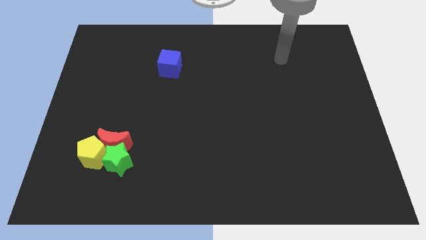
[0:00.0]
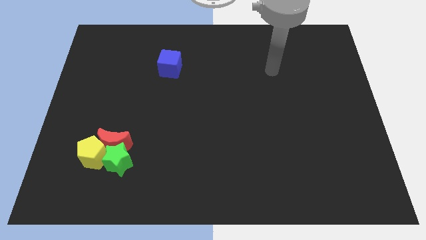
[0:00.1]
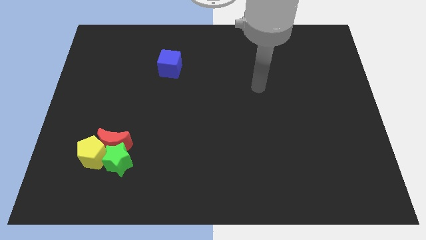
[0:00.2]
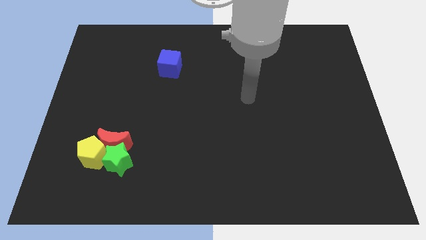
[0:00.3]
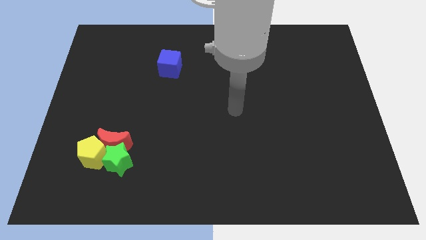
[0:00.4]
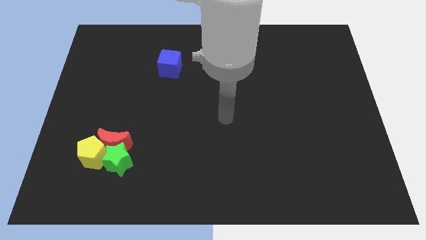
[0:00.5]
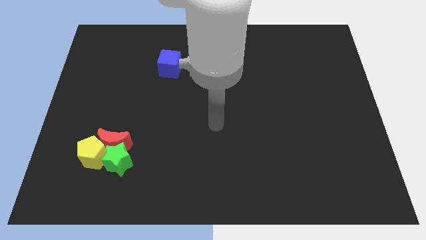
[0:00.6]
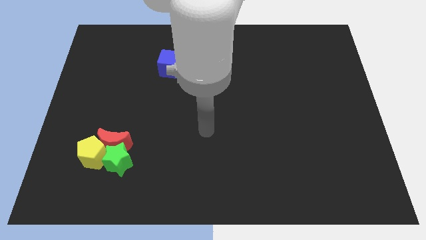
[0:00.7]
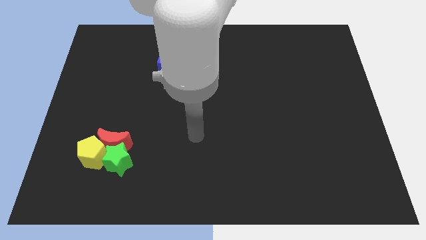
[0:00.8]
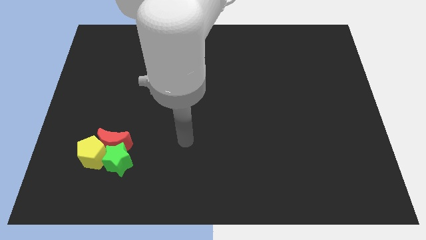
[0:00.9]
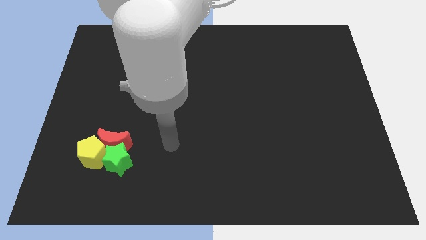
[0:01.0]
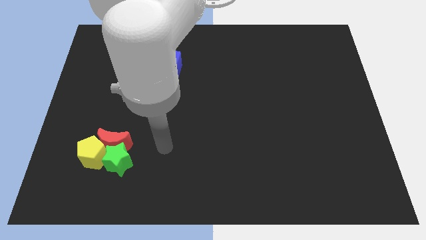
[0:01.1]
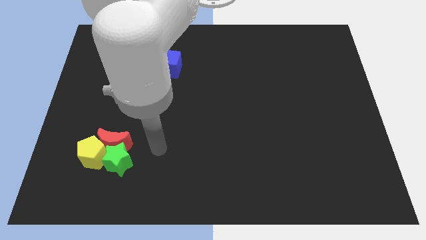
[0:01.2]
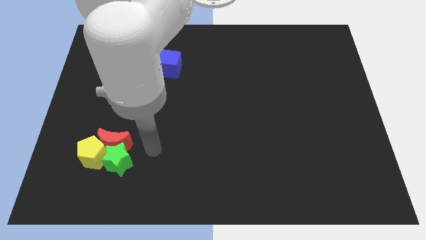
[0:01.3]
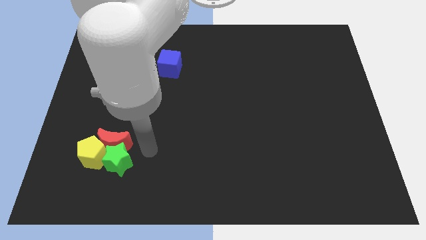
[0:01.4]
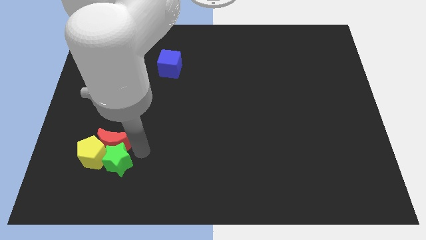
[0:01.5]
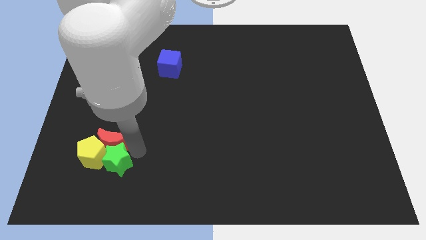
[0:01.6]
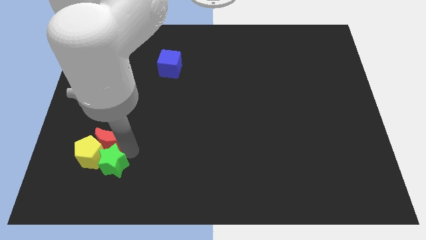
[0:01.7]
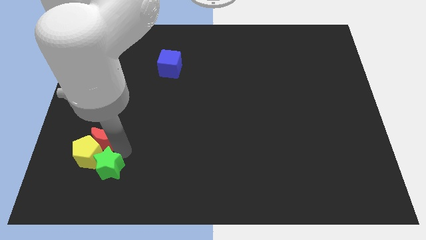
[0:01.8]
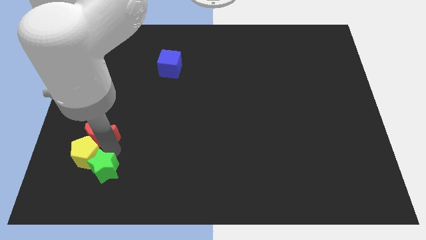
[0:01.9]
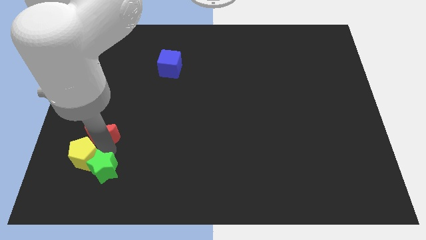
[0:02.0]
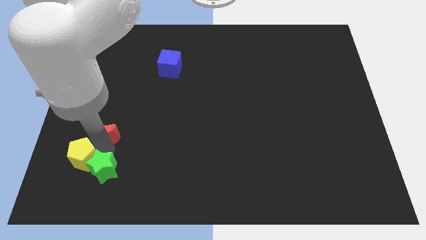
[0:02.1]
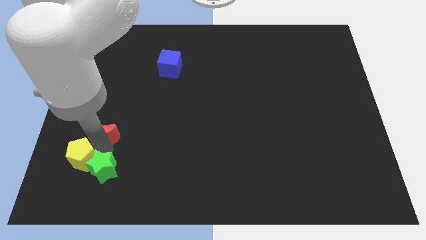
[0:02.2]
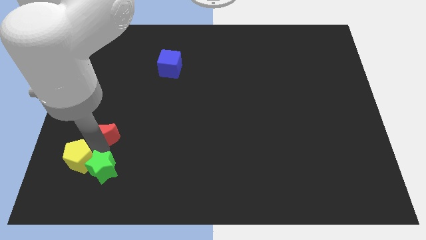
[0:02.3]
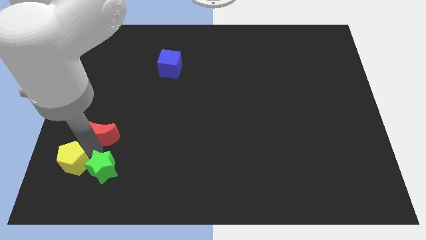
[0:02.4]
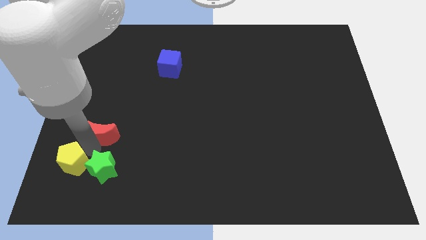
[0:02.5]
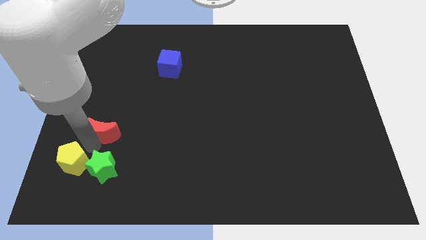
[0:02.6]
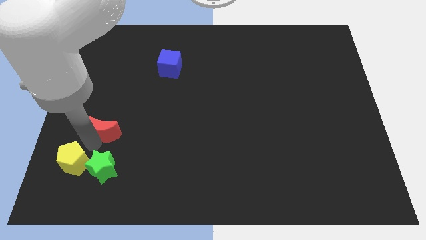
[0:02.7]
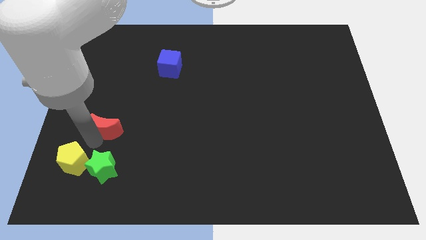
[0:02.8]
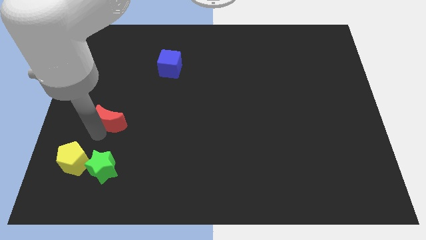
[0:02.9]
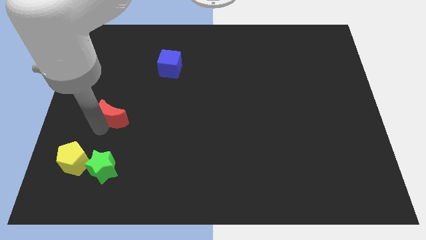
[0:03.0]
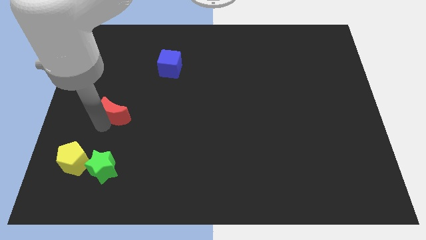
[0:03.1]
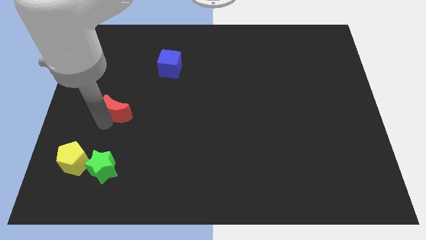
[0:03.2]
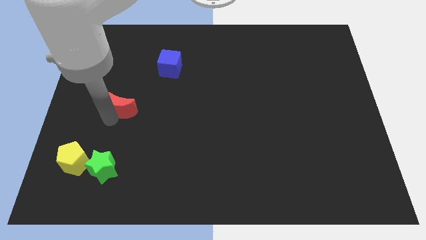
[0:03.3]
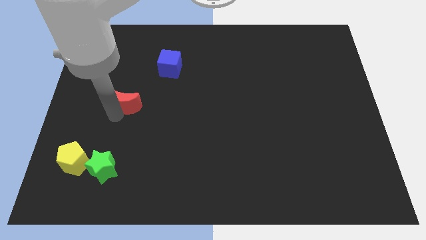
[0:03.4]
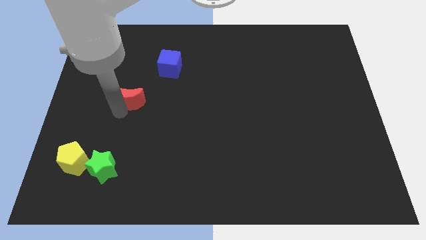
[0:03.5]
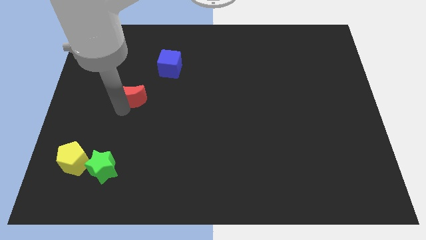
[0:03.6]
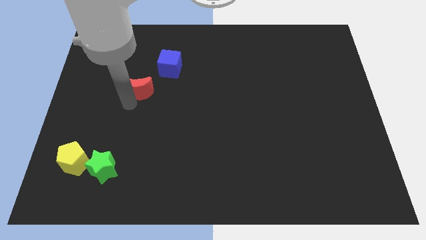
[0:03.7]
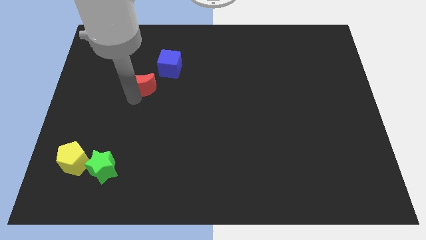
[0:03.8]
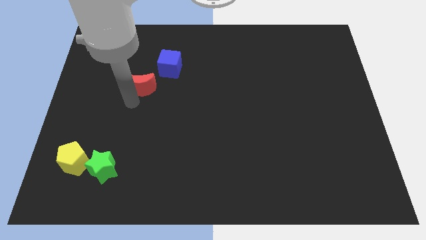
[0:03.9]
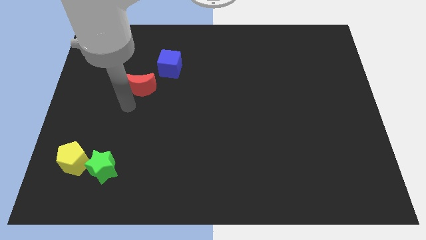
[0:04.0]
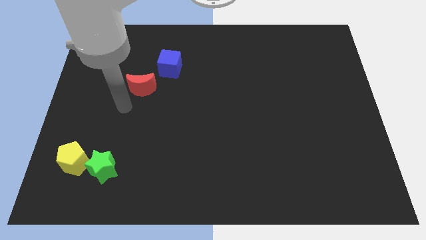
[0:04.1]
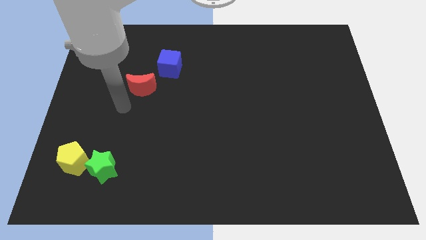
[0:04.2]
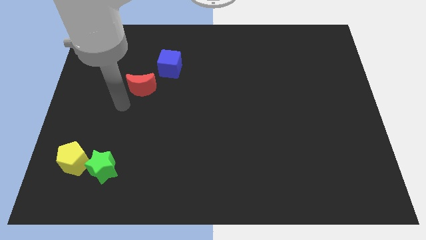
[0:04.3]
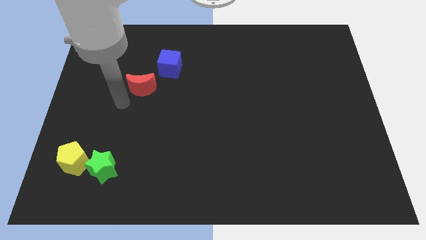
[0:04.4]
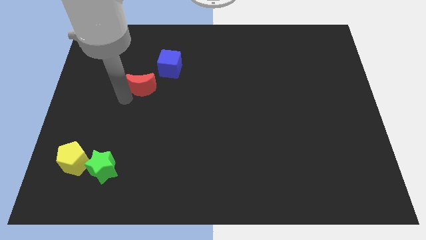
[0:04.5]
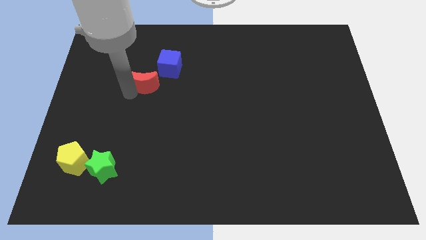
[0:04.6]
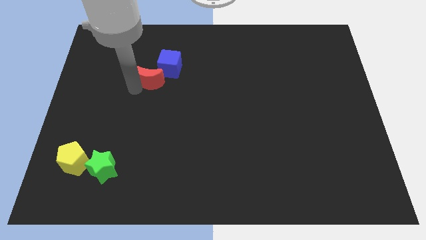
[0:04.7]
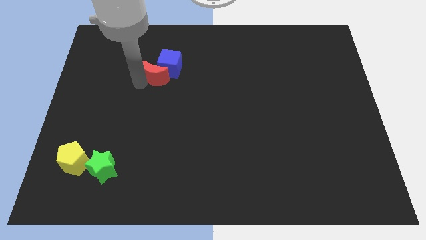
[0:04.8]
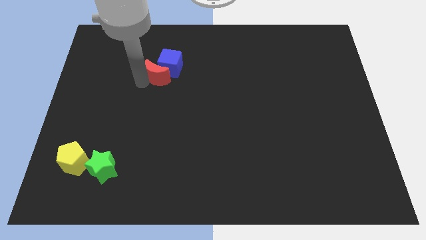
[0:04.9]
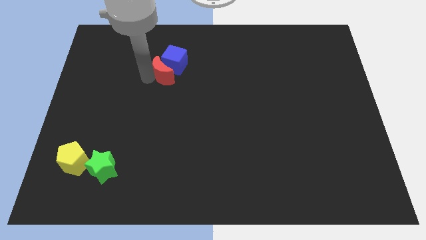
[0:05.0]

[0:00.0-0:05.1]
move the red block close to the cube

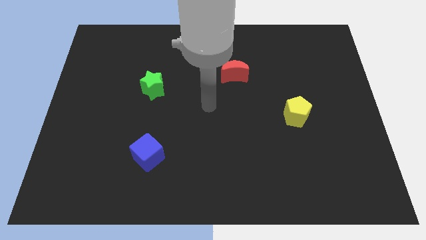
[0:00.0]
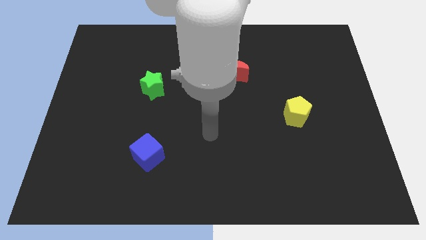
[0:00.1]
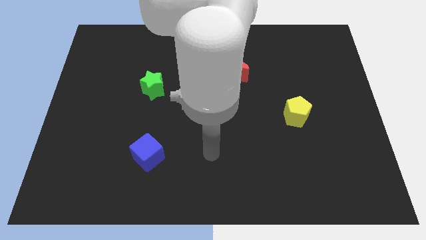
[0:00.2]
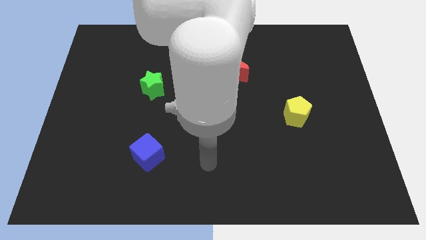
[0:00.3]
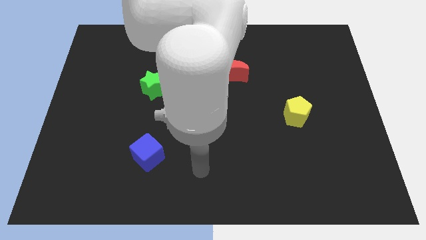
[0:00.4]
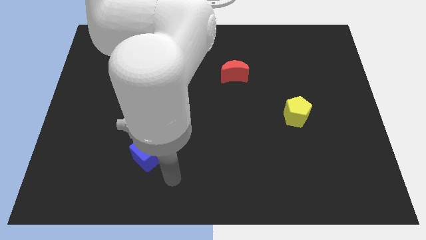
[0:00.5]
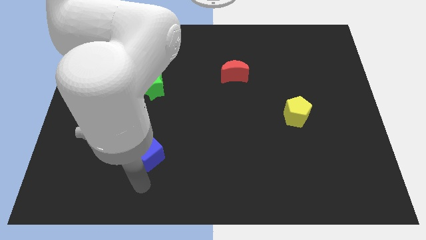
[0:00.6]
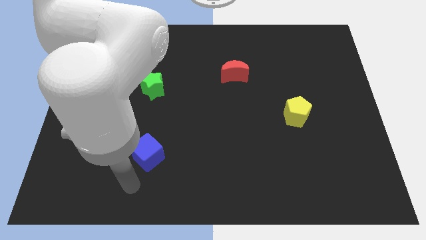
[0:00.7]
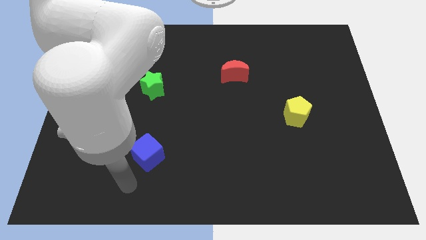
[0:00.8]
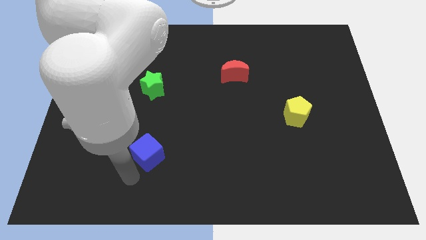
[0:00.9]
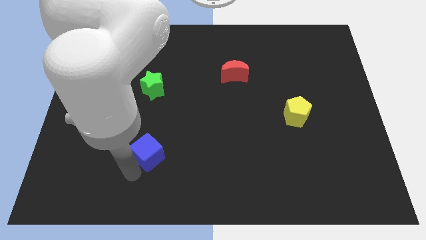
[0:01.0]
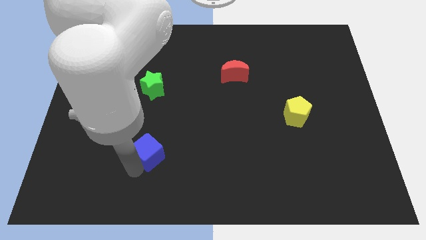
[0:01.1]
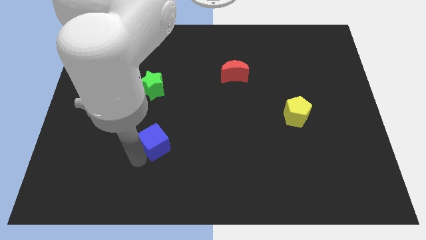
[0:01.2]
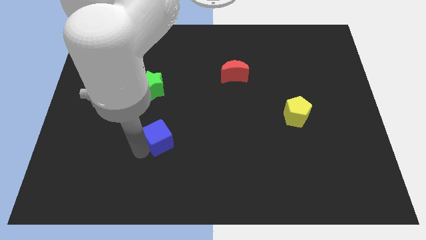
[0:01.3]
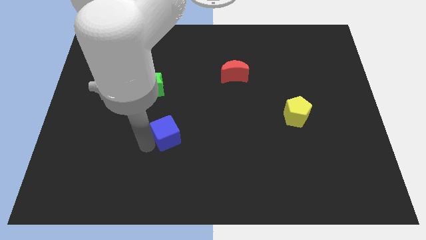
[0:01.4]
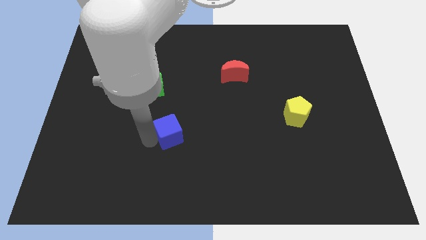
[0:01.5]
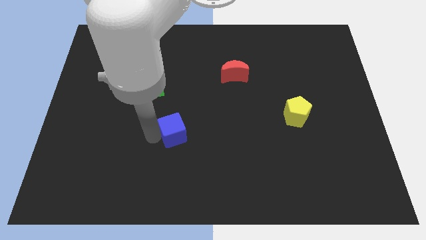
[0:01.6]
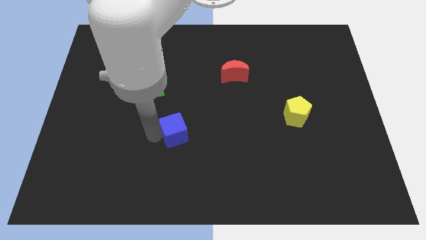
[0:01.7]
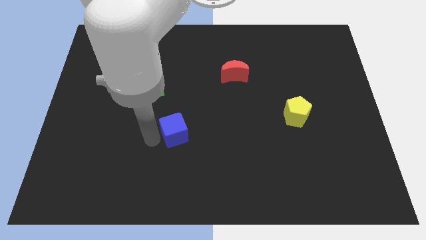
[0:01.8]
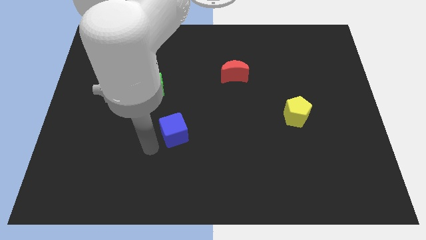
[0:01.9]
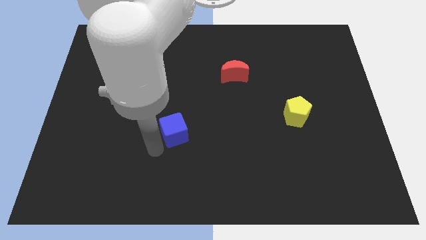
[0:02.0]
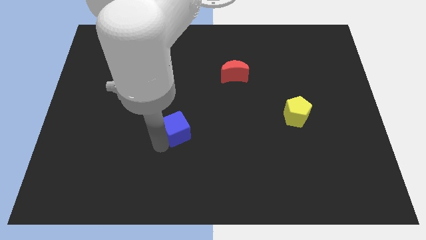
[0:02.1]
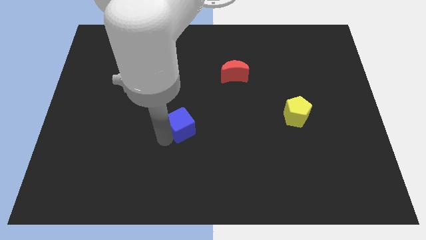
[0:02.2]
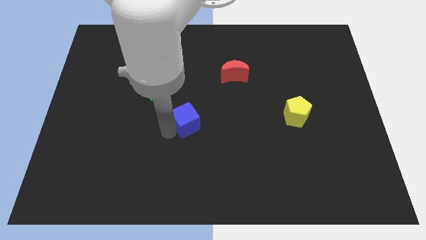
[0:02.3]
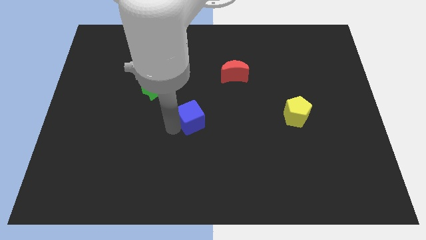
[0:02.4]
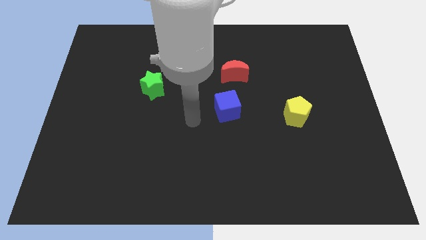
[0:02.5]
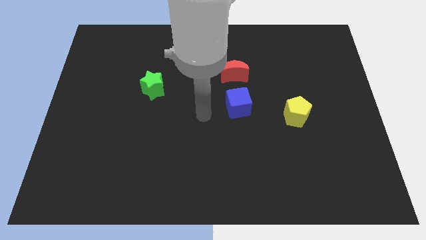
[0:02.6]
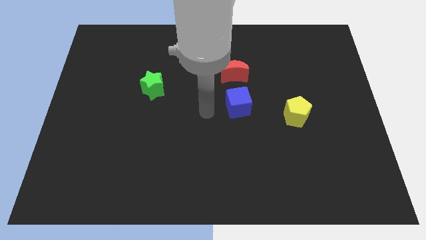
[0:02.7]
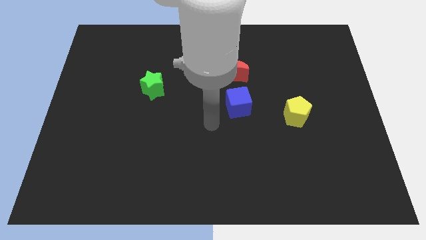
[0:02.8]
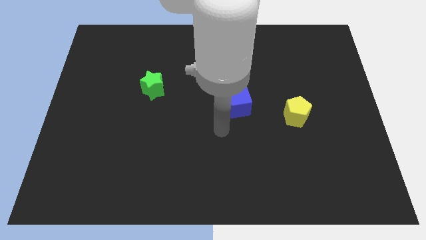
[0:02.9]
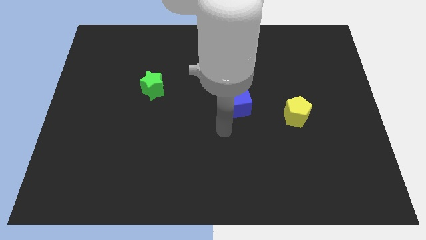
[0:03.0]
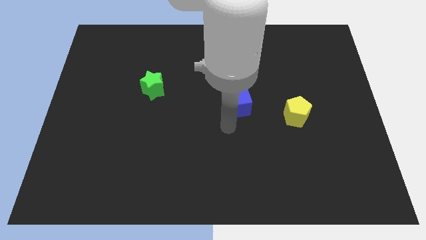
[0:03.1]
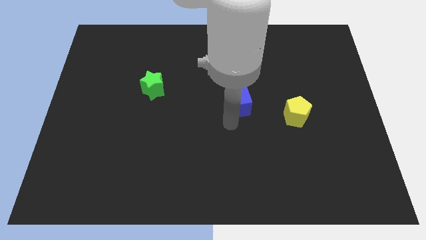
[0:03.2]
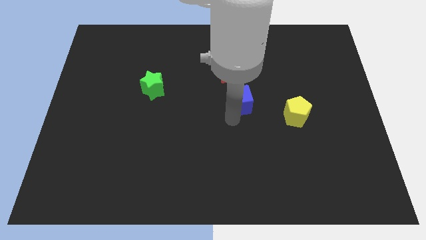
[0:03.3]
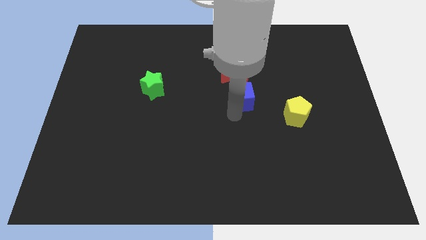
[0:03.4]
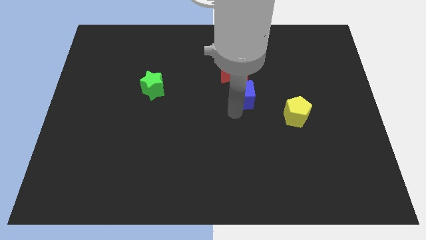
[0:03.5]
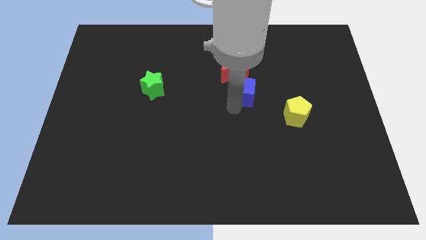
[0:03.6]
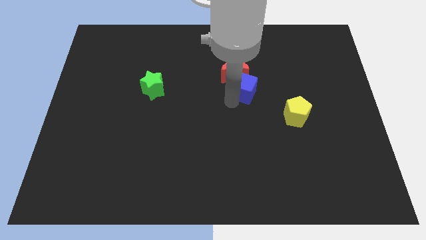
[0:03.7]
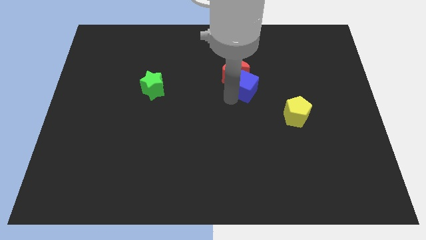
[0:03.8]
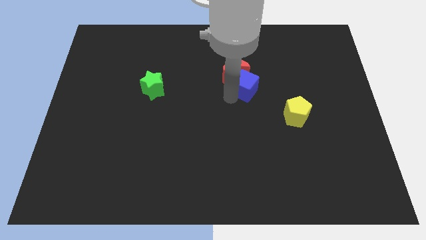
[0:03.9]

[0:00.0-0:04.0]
move the blue block to the moon
